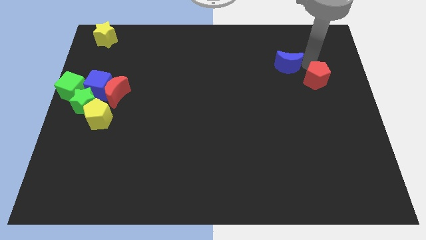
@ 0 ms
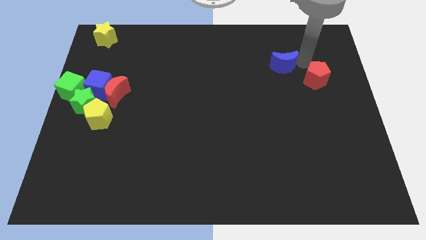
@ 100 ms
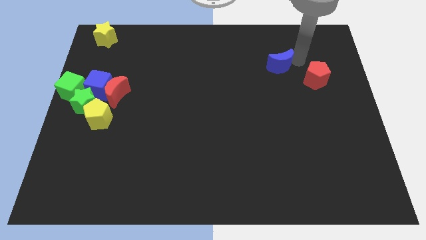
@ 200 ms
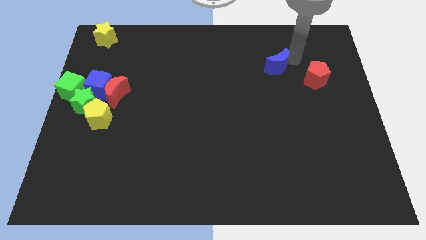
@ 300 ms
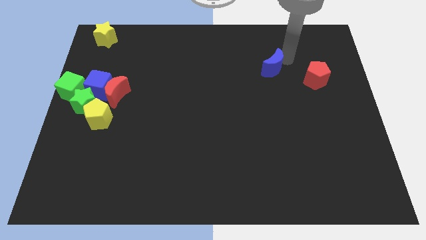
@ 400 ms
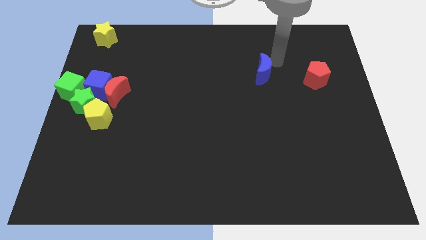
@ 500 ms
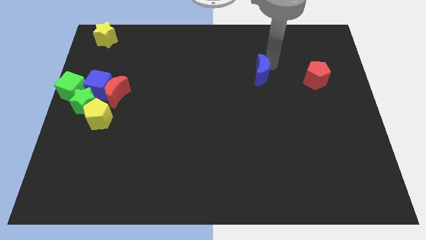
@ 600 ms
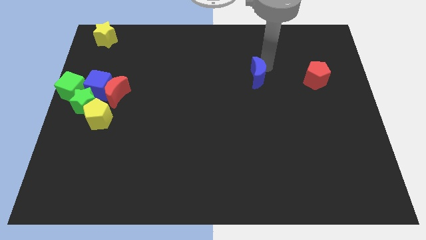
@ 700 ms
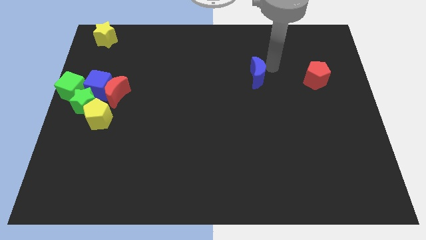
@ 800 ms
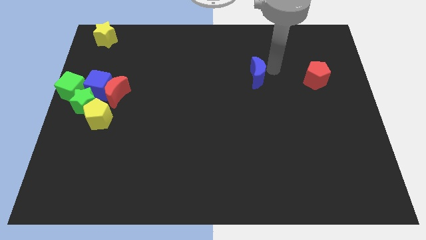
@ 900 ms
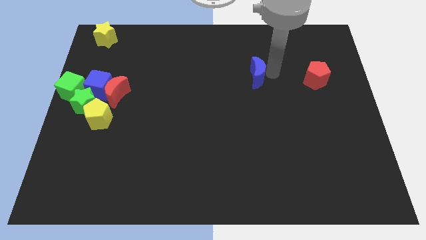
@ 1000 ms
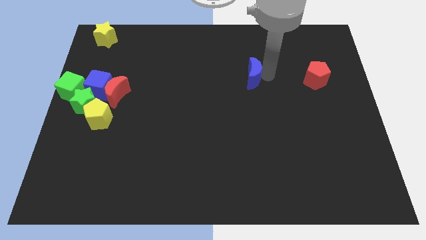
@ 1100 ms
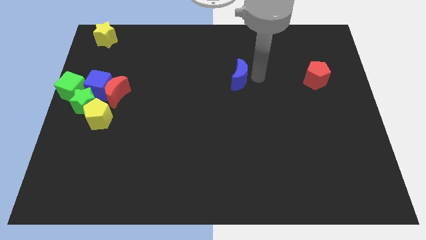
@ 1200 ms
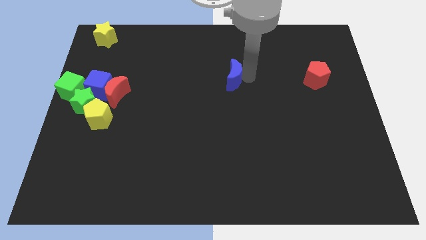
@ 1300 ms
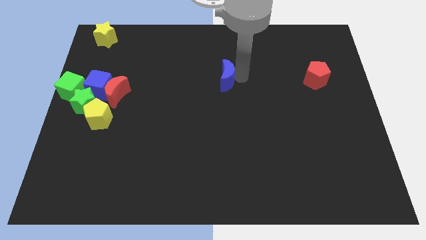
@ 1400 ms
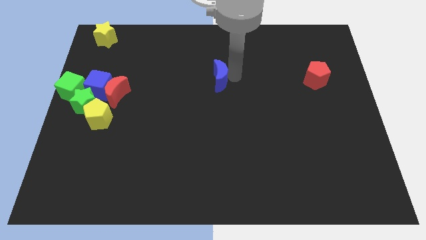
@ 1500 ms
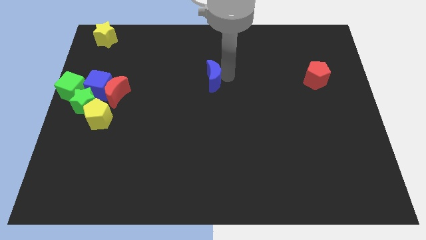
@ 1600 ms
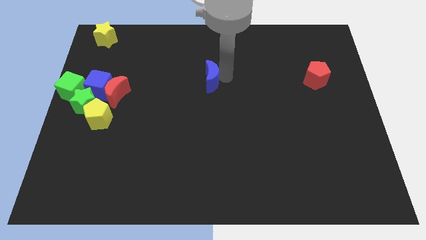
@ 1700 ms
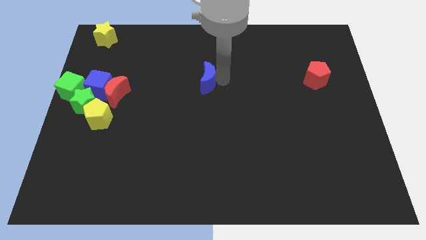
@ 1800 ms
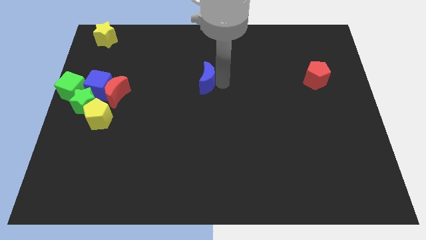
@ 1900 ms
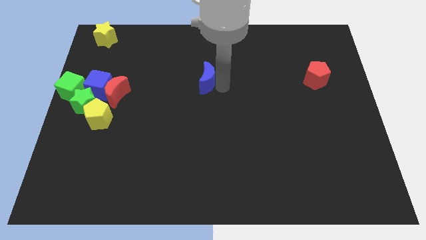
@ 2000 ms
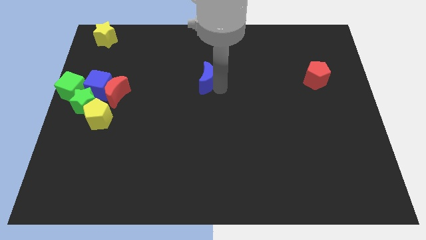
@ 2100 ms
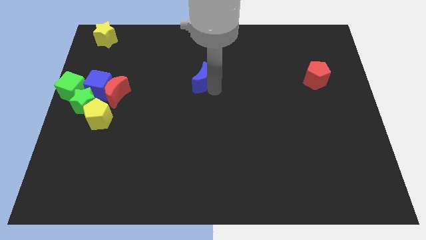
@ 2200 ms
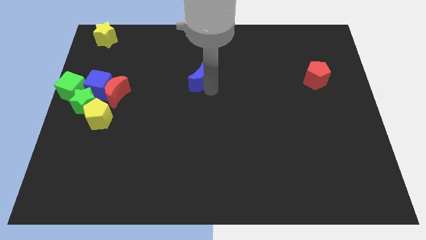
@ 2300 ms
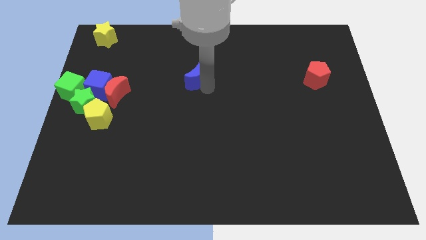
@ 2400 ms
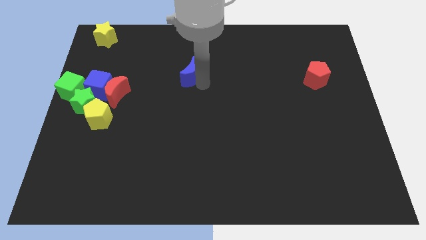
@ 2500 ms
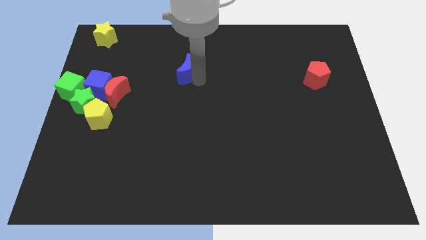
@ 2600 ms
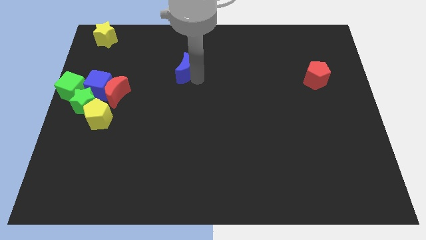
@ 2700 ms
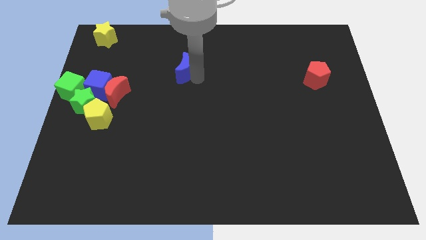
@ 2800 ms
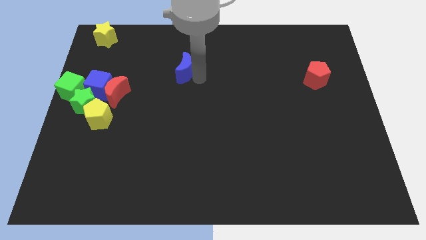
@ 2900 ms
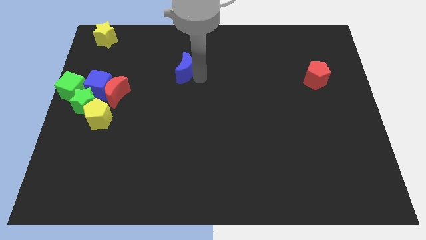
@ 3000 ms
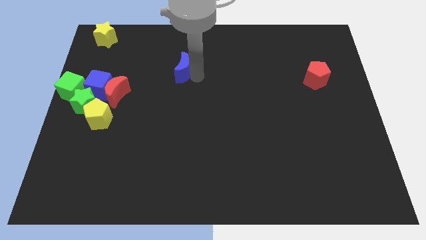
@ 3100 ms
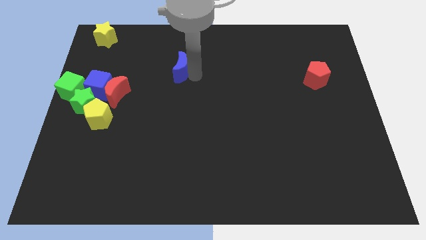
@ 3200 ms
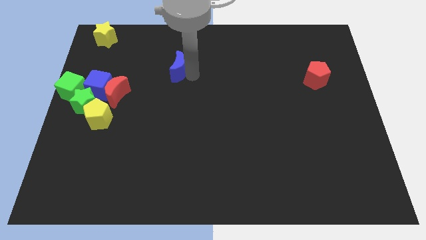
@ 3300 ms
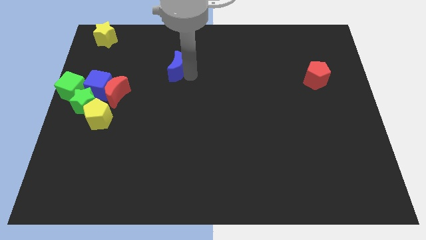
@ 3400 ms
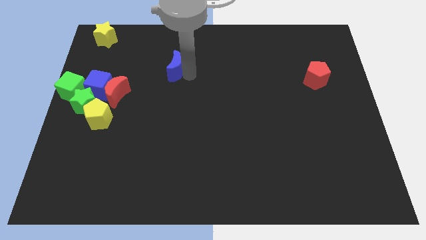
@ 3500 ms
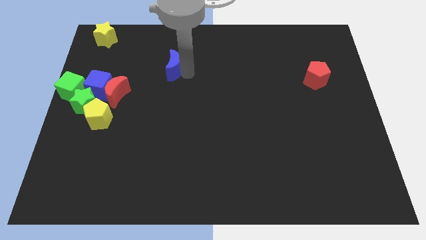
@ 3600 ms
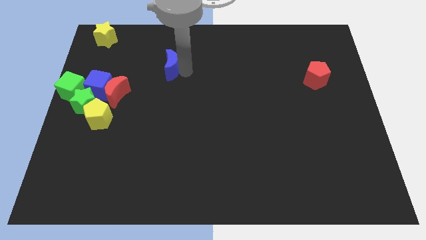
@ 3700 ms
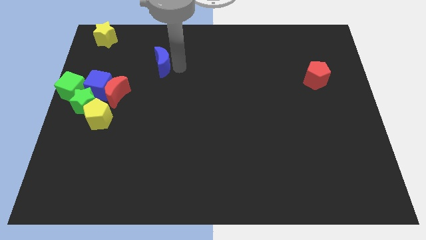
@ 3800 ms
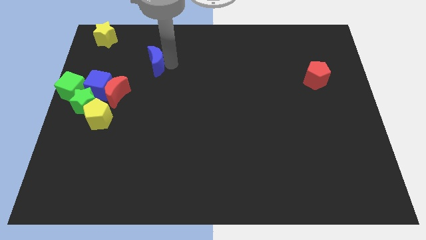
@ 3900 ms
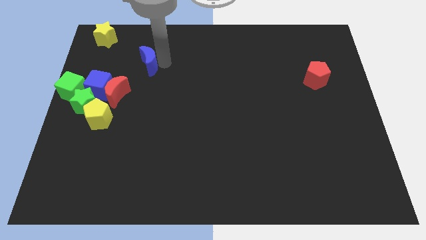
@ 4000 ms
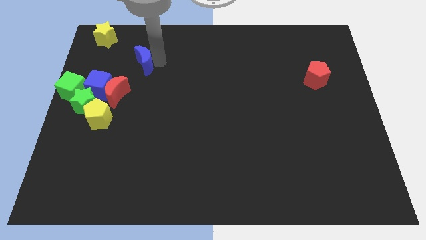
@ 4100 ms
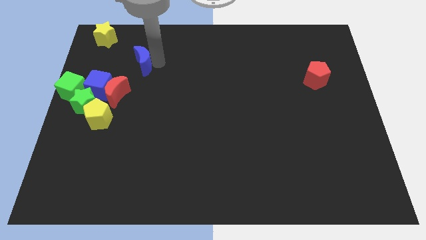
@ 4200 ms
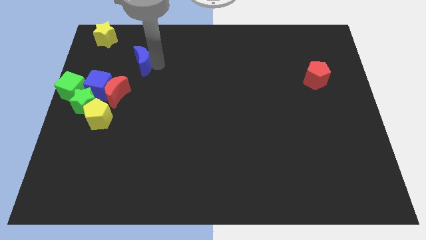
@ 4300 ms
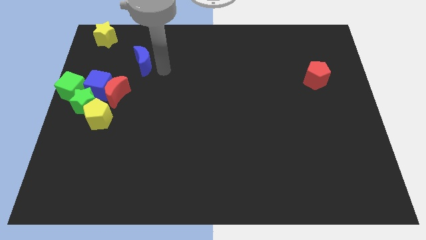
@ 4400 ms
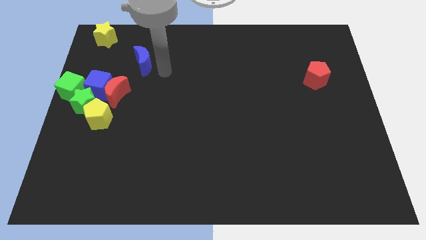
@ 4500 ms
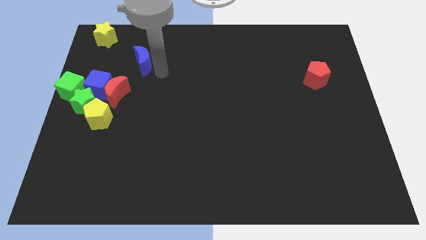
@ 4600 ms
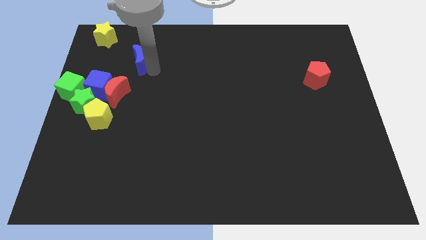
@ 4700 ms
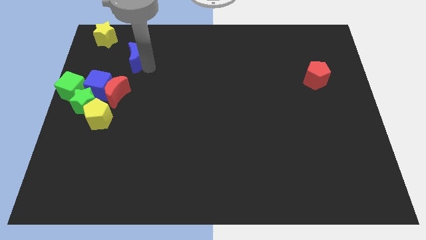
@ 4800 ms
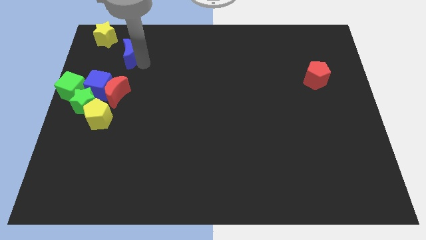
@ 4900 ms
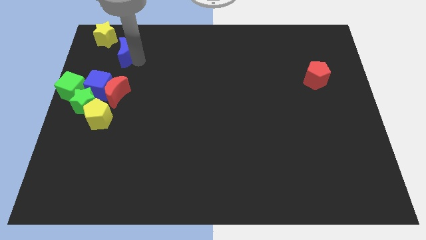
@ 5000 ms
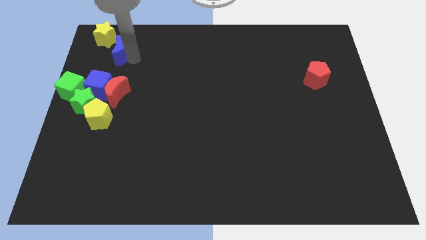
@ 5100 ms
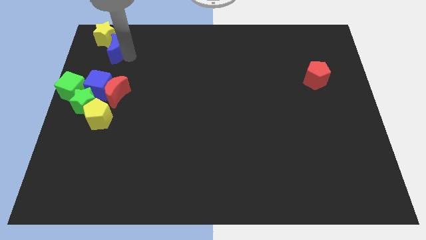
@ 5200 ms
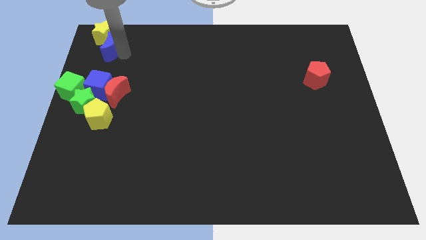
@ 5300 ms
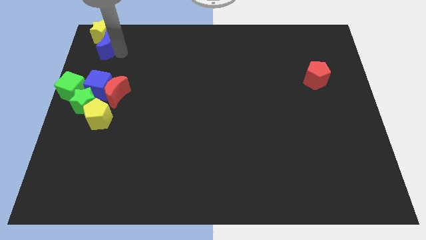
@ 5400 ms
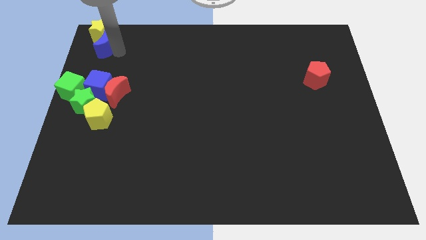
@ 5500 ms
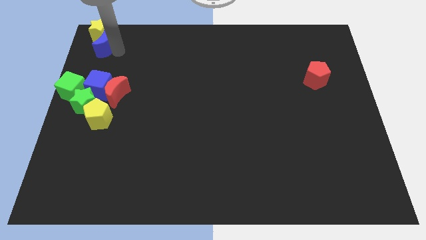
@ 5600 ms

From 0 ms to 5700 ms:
move the blue crescent to the top left of the board

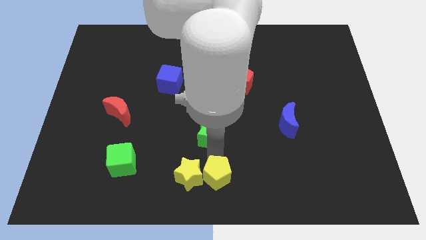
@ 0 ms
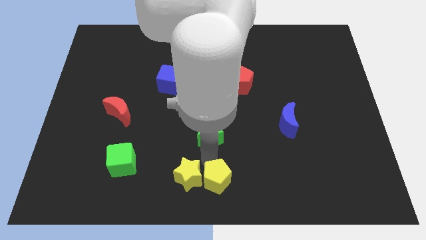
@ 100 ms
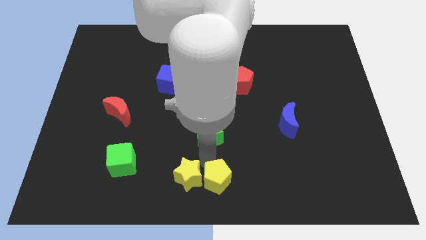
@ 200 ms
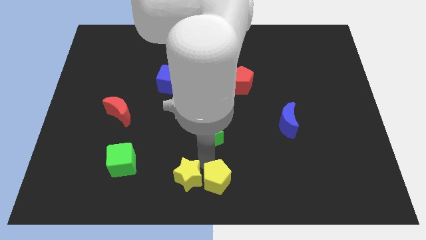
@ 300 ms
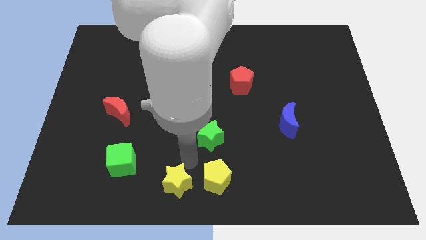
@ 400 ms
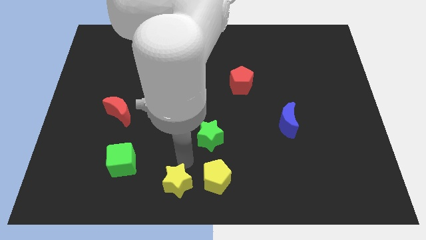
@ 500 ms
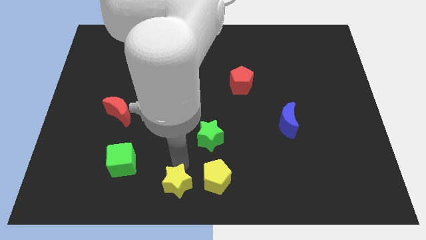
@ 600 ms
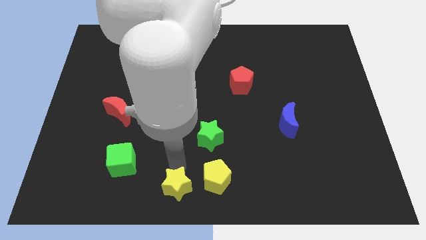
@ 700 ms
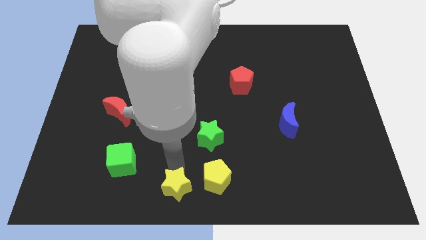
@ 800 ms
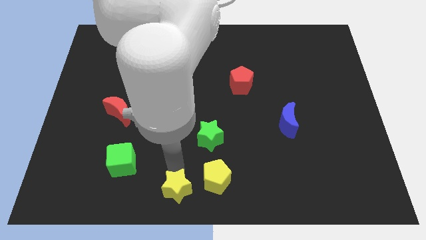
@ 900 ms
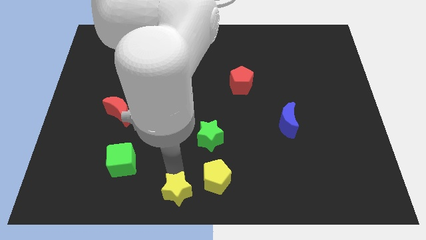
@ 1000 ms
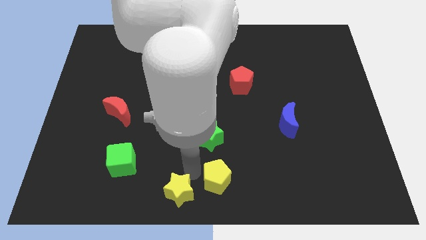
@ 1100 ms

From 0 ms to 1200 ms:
separate the yellow blocks

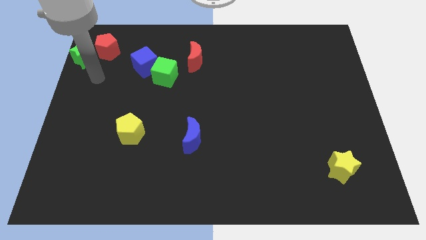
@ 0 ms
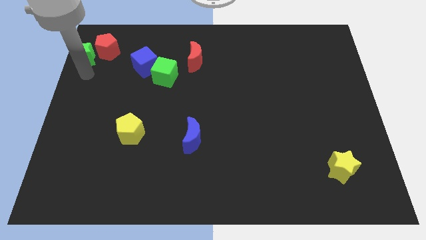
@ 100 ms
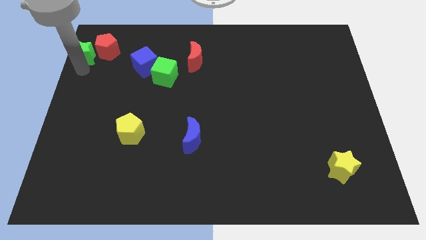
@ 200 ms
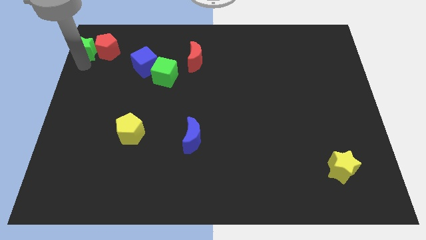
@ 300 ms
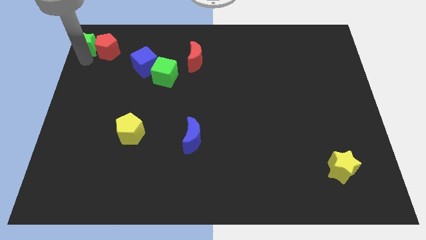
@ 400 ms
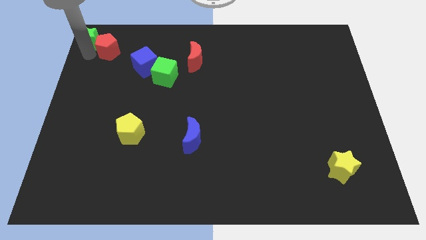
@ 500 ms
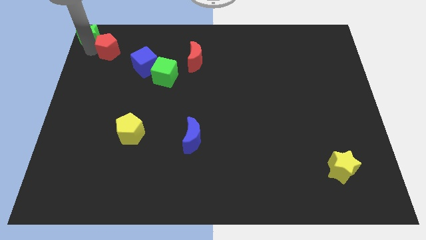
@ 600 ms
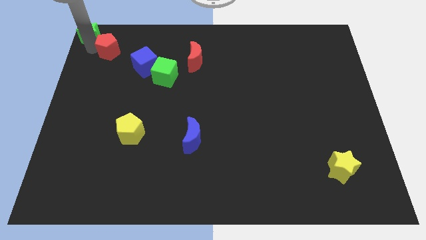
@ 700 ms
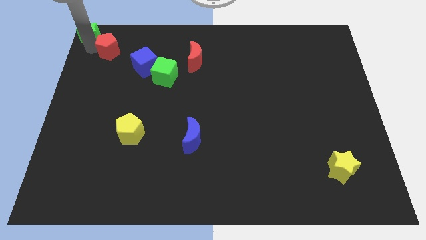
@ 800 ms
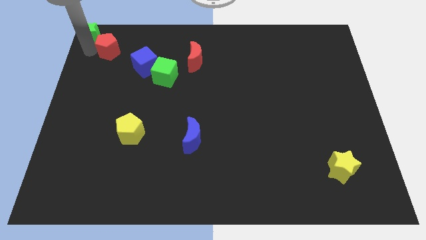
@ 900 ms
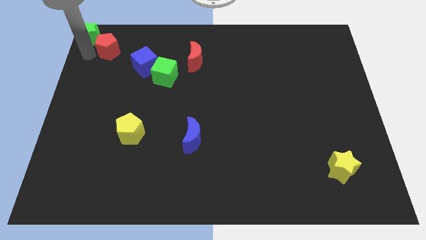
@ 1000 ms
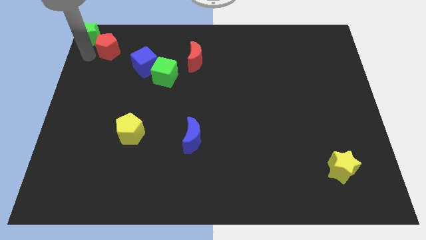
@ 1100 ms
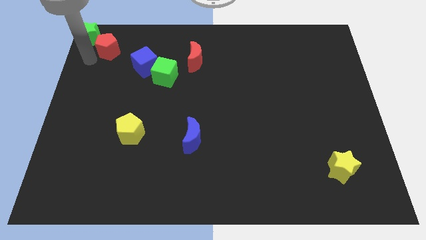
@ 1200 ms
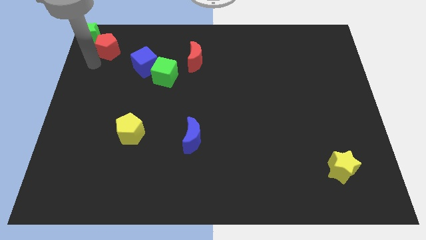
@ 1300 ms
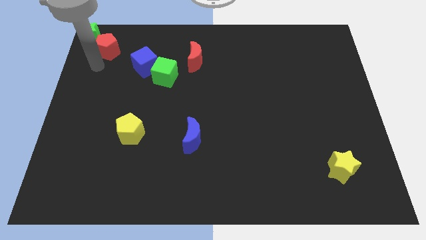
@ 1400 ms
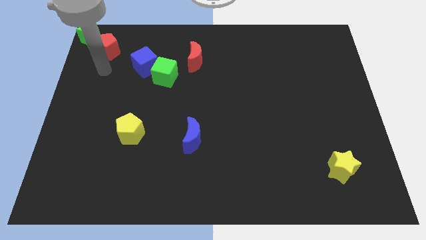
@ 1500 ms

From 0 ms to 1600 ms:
move green star to the left top corner

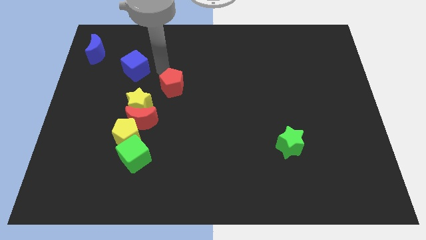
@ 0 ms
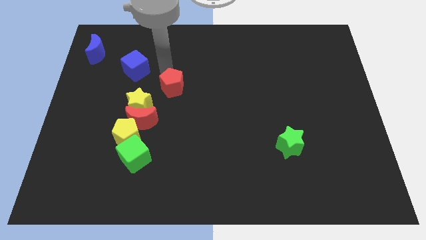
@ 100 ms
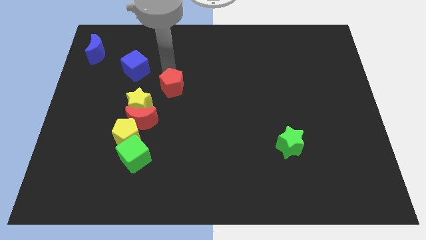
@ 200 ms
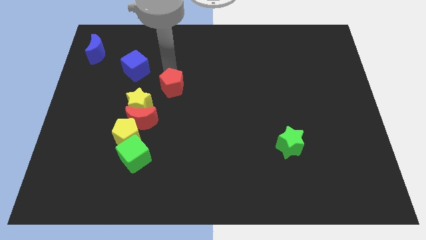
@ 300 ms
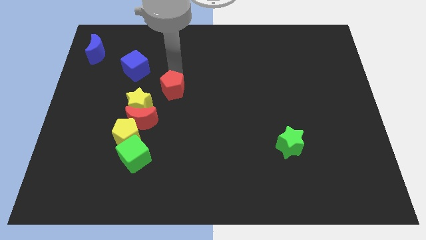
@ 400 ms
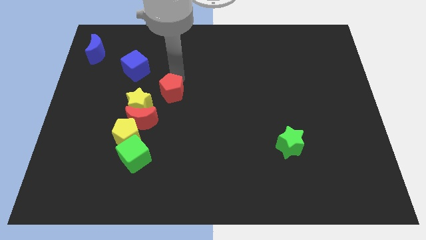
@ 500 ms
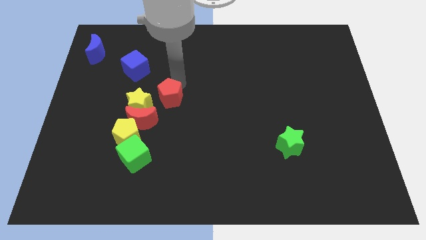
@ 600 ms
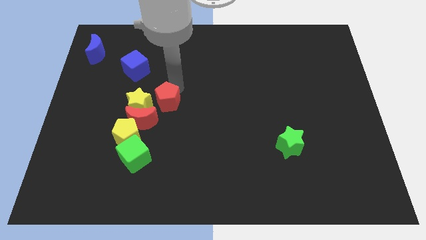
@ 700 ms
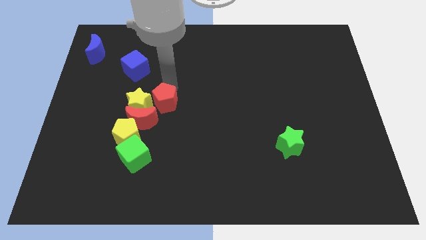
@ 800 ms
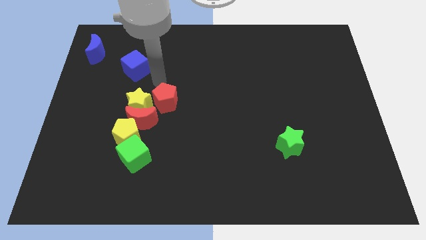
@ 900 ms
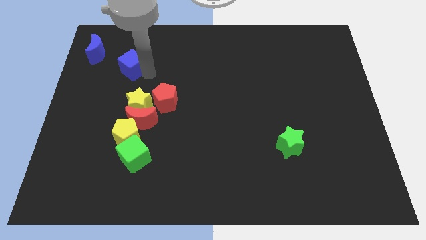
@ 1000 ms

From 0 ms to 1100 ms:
move the red pentagon to the right of the yellow star
